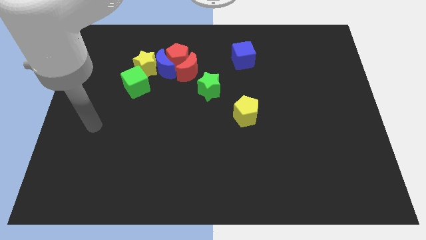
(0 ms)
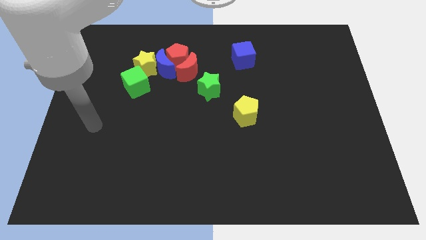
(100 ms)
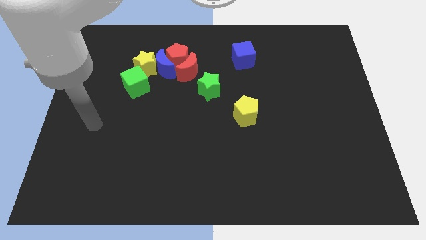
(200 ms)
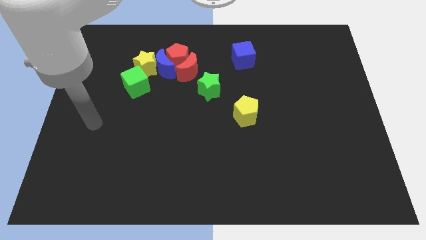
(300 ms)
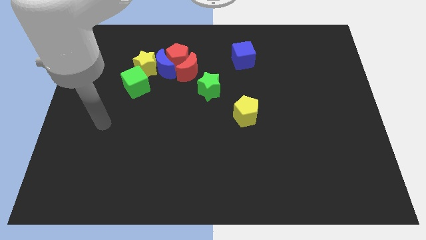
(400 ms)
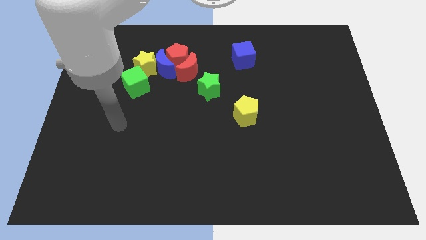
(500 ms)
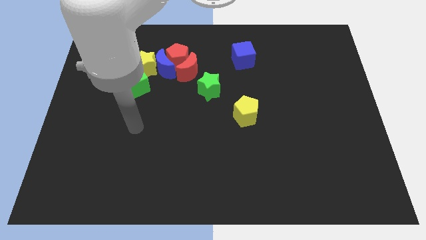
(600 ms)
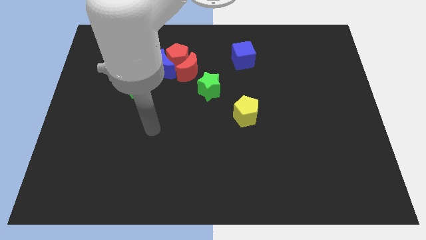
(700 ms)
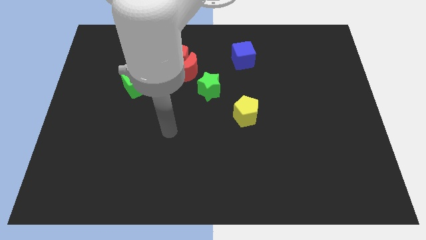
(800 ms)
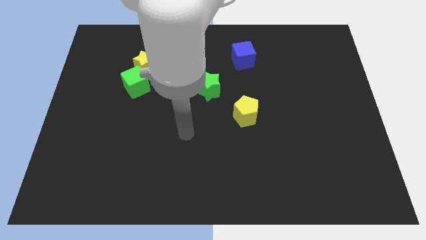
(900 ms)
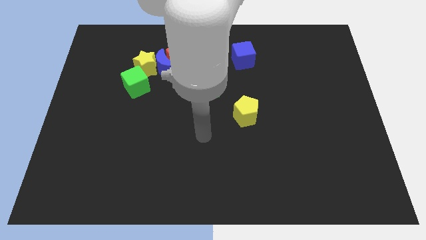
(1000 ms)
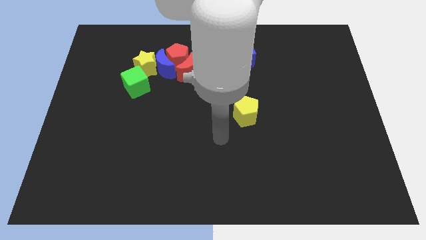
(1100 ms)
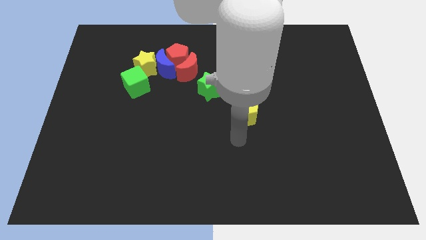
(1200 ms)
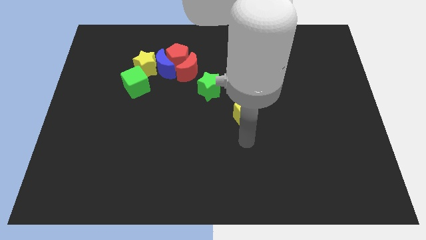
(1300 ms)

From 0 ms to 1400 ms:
point your hand at the bottom side of the yellow pentagon

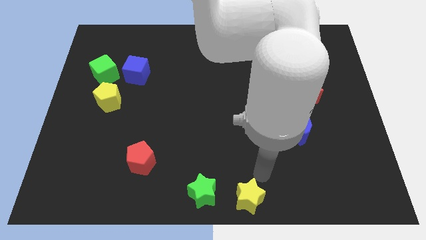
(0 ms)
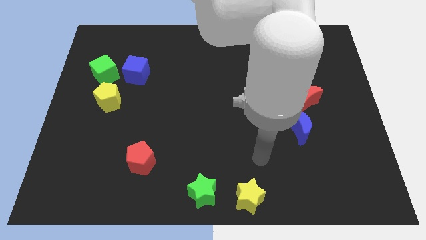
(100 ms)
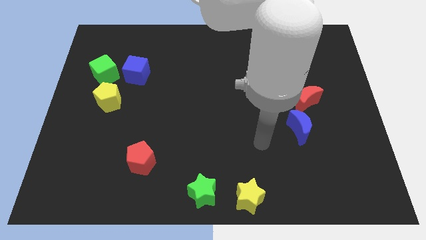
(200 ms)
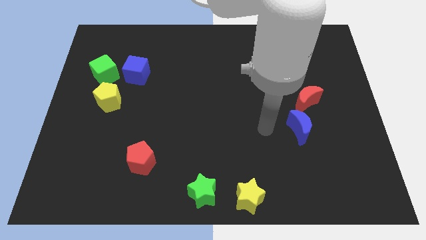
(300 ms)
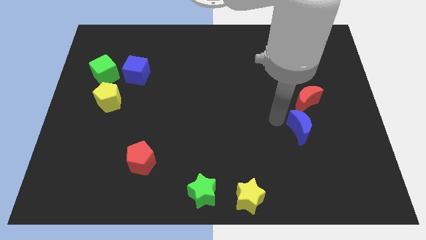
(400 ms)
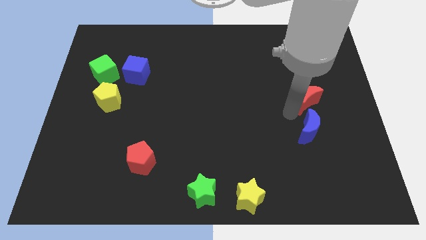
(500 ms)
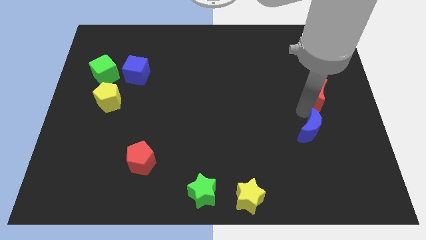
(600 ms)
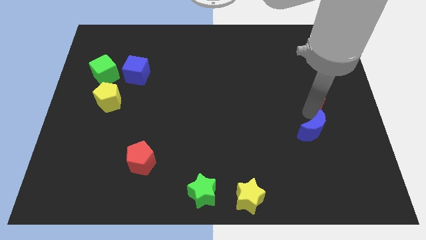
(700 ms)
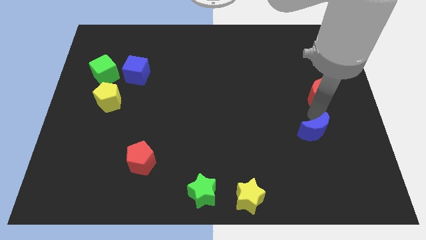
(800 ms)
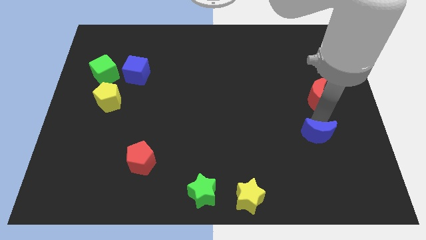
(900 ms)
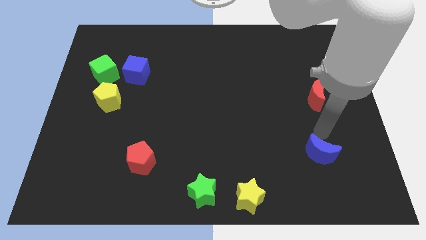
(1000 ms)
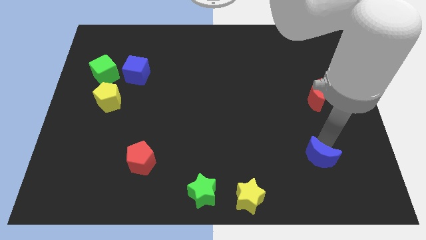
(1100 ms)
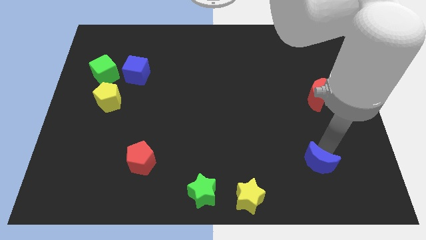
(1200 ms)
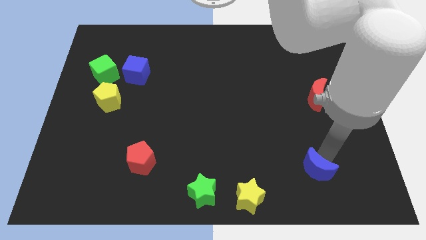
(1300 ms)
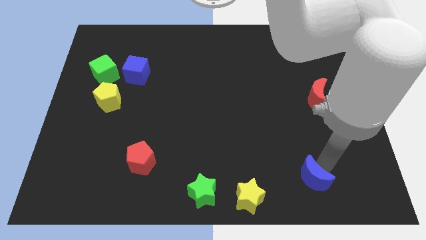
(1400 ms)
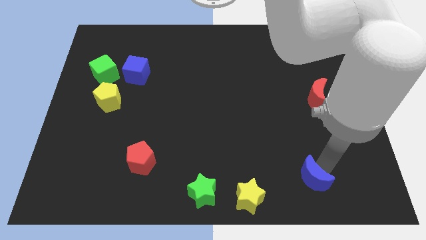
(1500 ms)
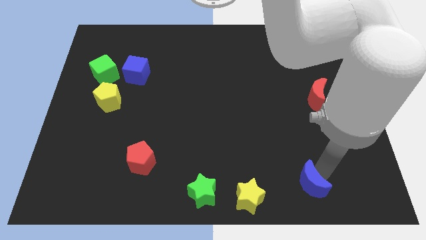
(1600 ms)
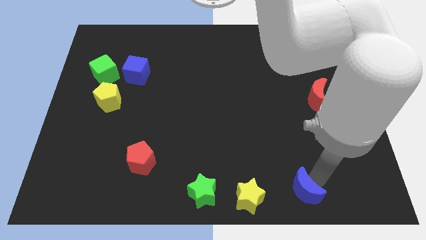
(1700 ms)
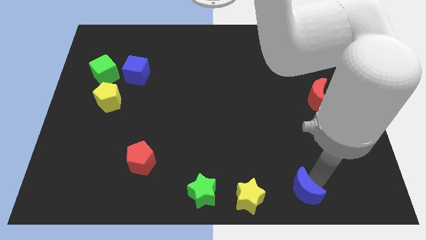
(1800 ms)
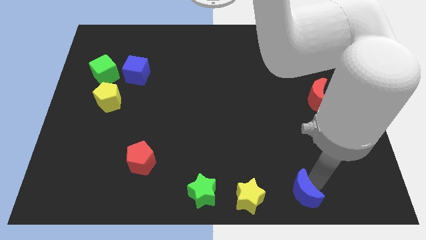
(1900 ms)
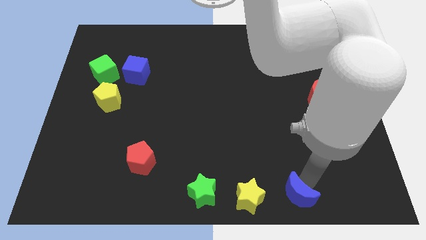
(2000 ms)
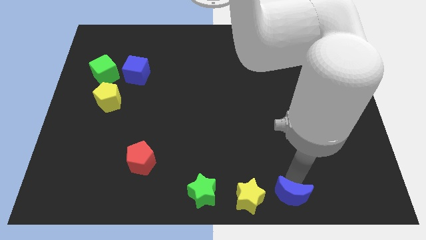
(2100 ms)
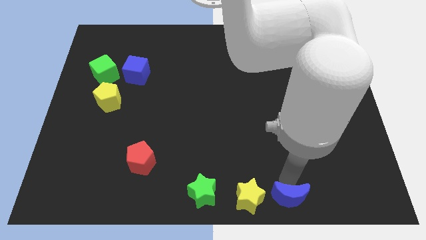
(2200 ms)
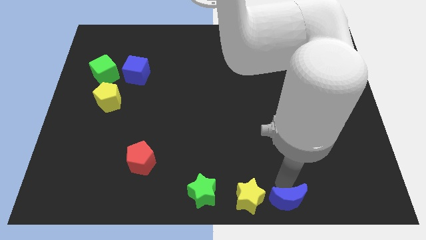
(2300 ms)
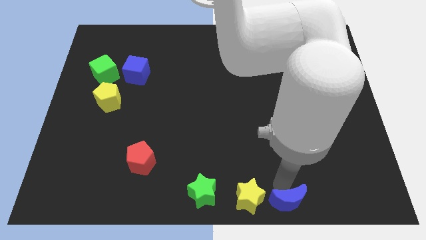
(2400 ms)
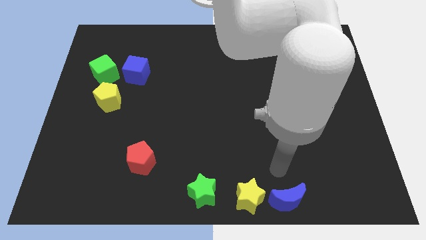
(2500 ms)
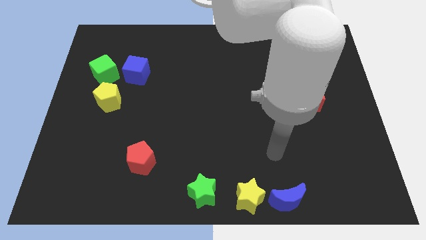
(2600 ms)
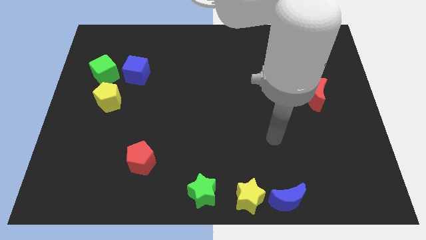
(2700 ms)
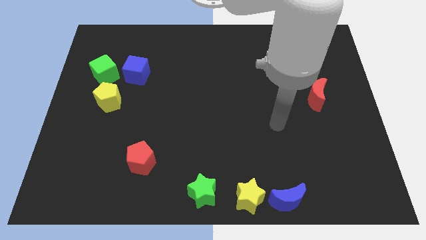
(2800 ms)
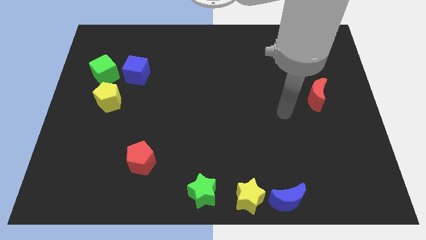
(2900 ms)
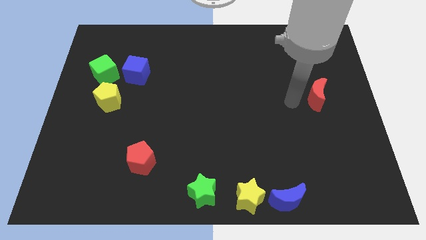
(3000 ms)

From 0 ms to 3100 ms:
push the blue crescent in a position beside yellow star

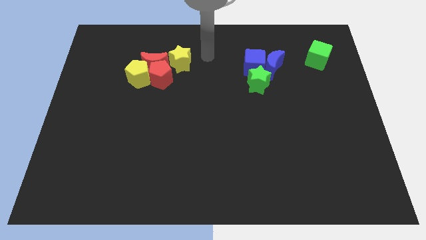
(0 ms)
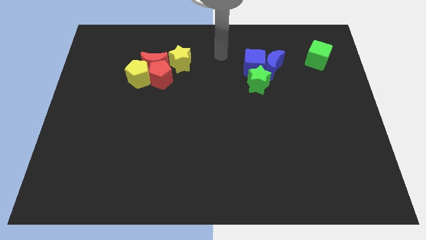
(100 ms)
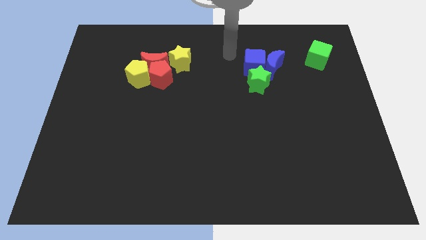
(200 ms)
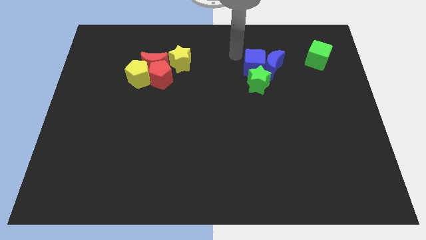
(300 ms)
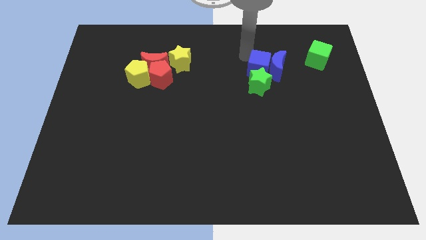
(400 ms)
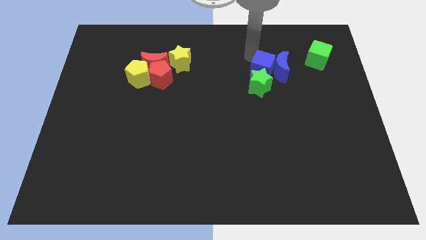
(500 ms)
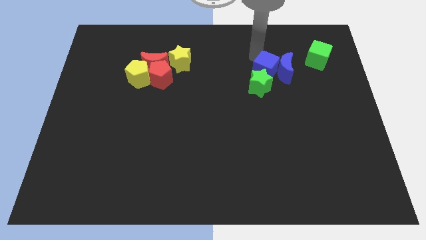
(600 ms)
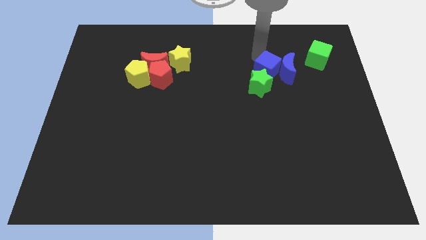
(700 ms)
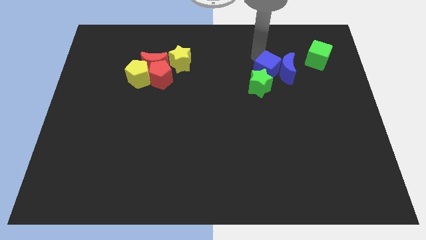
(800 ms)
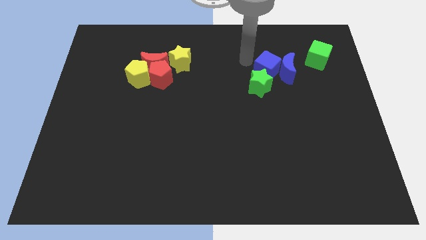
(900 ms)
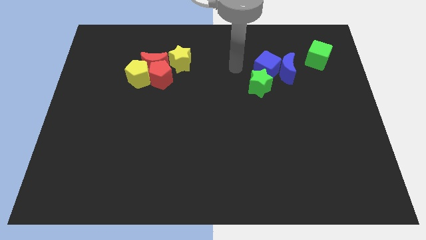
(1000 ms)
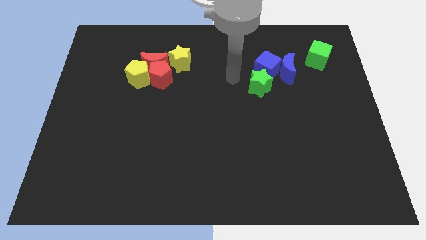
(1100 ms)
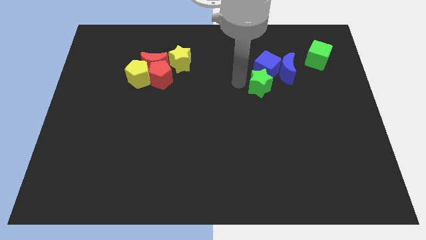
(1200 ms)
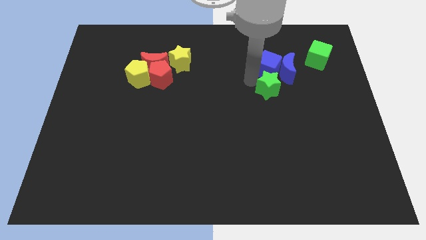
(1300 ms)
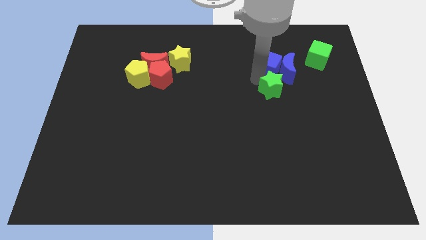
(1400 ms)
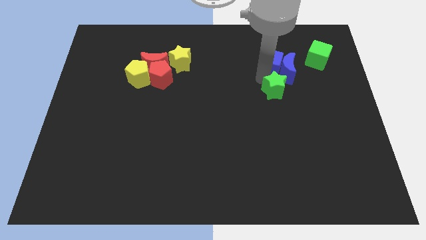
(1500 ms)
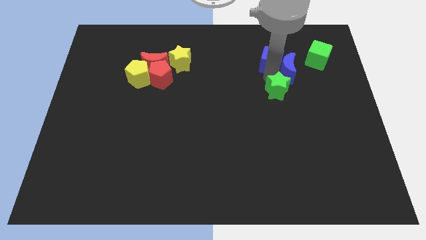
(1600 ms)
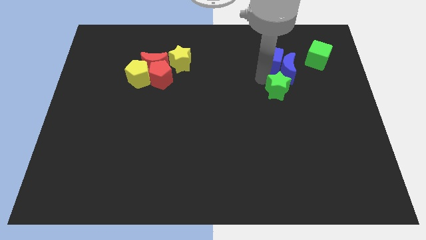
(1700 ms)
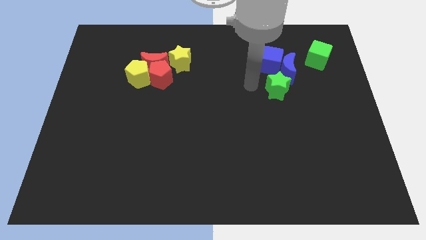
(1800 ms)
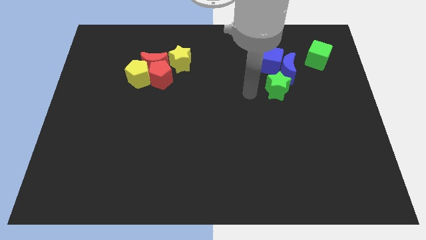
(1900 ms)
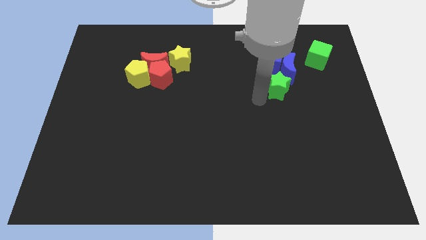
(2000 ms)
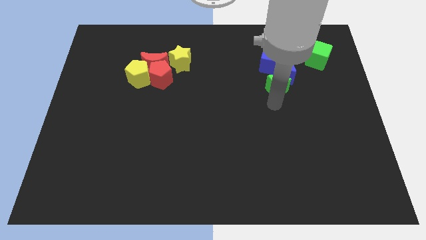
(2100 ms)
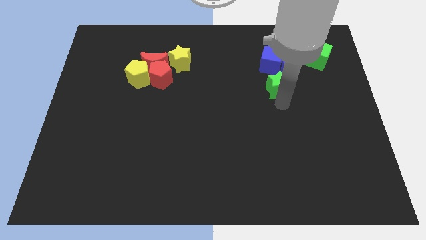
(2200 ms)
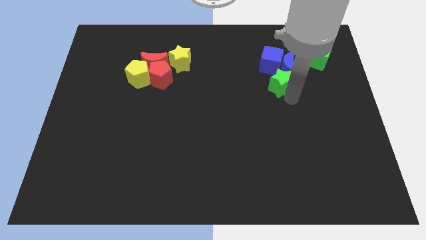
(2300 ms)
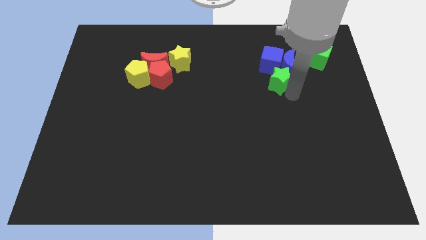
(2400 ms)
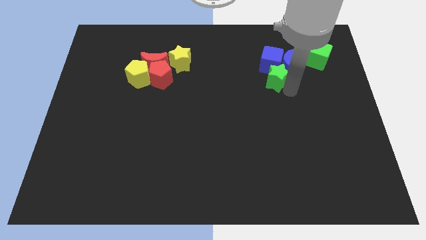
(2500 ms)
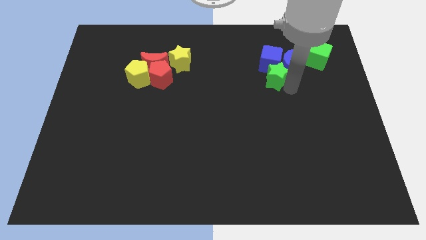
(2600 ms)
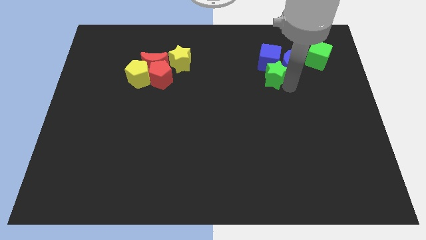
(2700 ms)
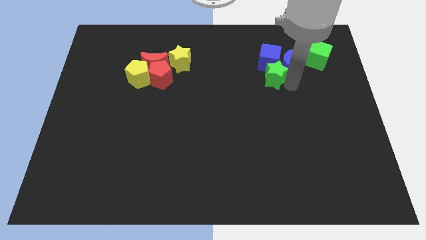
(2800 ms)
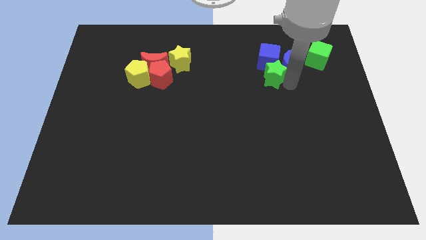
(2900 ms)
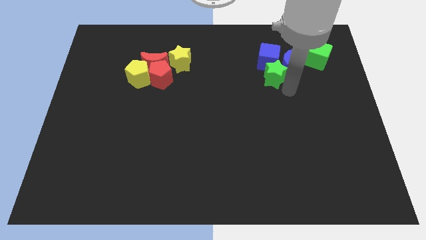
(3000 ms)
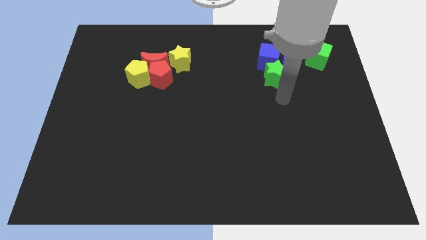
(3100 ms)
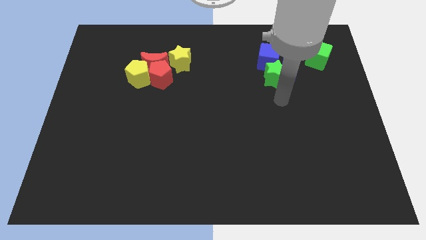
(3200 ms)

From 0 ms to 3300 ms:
move the blue blocks and the green star towards the green cube

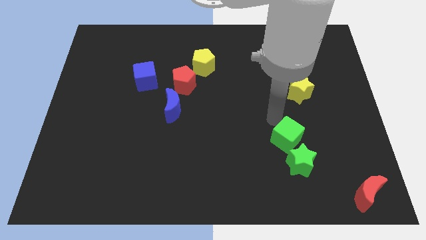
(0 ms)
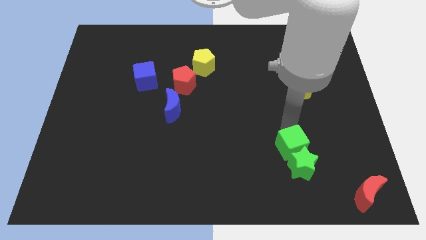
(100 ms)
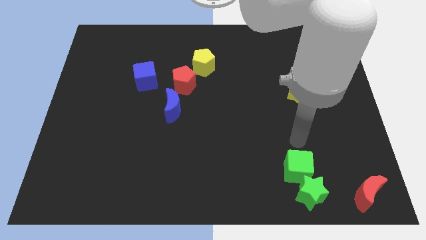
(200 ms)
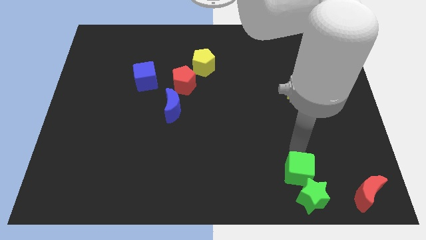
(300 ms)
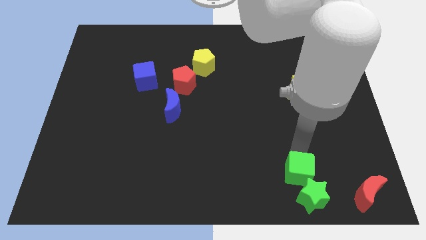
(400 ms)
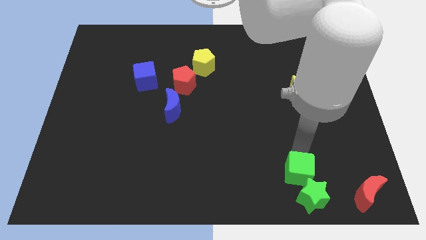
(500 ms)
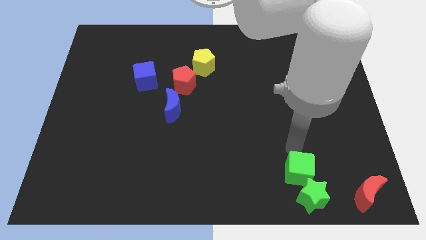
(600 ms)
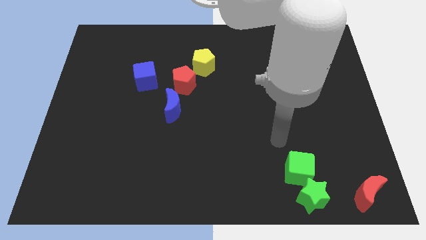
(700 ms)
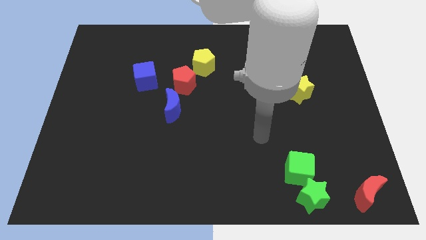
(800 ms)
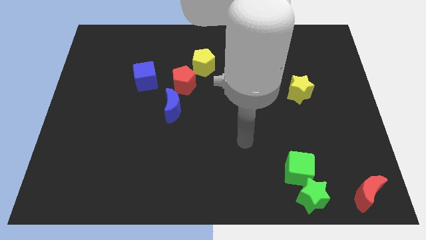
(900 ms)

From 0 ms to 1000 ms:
move the green cube green star towards the bottom right to the board

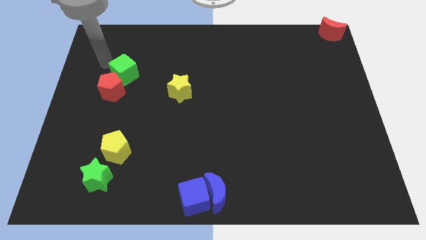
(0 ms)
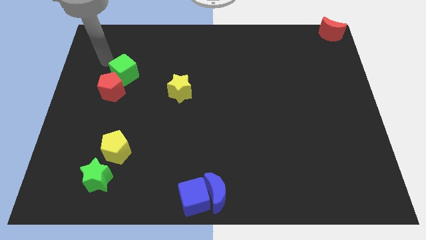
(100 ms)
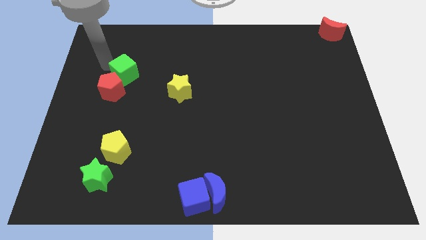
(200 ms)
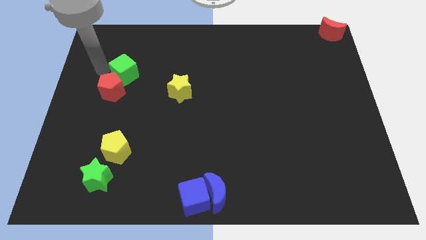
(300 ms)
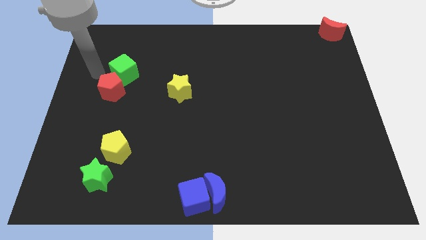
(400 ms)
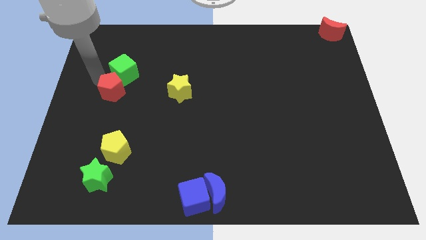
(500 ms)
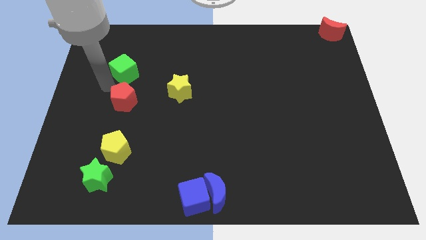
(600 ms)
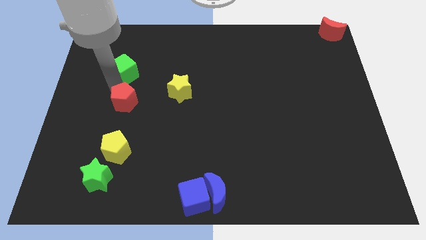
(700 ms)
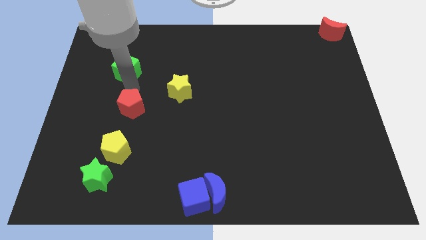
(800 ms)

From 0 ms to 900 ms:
seperate the green cube and red pentagon
